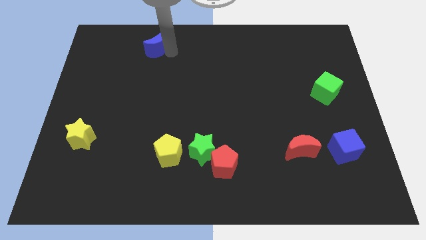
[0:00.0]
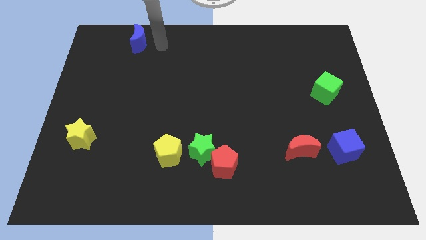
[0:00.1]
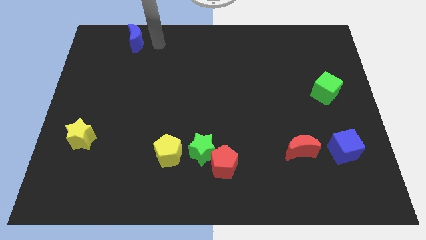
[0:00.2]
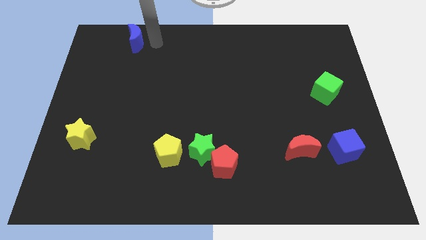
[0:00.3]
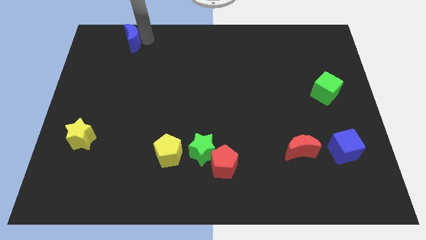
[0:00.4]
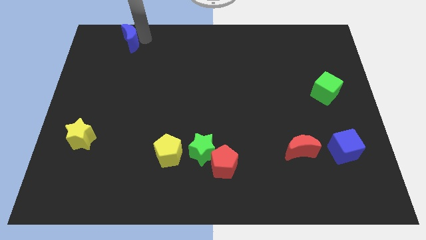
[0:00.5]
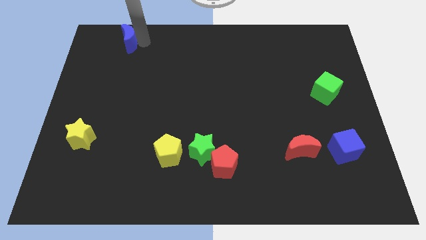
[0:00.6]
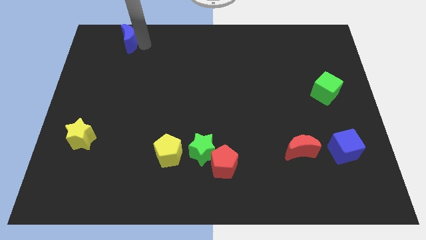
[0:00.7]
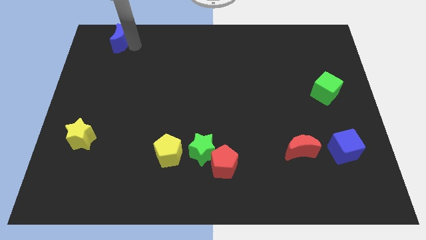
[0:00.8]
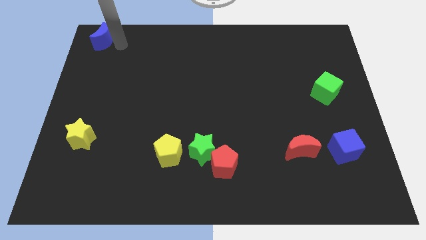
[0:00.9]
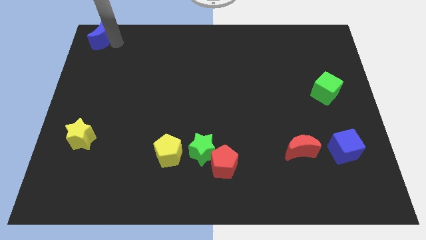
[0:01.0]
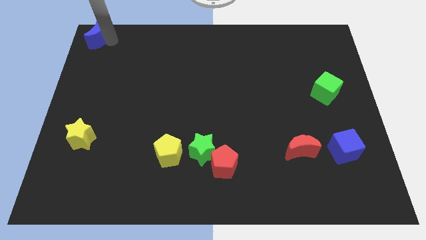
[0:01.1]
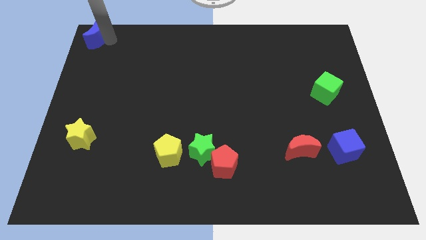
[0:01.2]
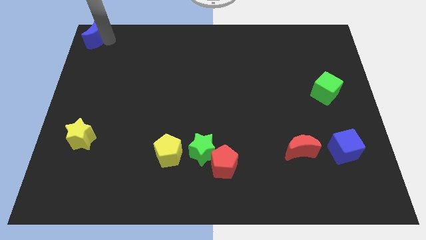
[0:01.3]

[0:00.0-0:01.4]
place the blue moon parallel to the yellow star

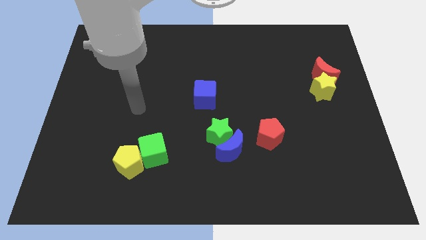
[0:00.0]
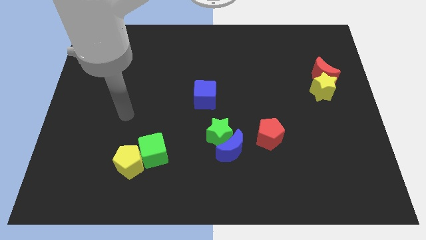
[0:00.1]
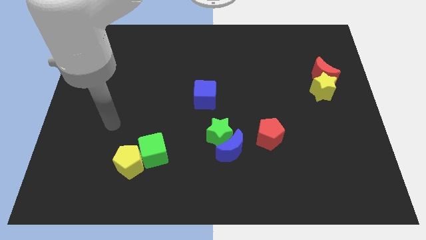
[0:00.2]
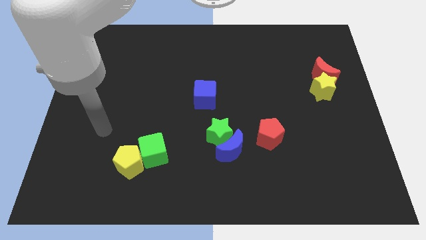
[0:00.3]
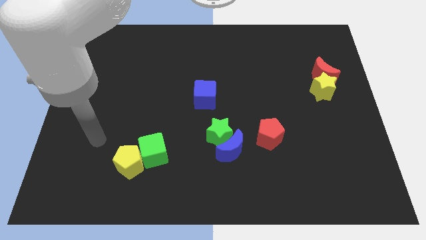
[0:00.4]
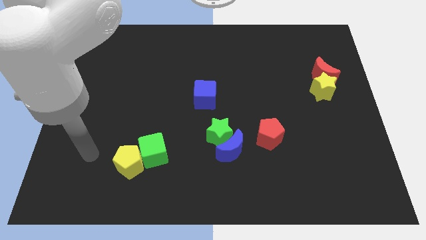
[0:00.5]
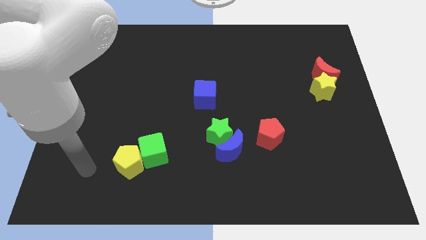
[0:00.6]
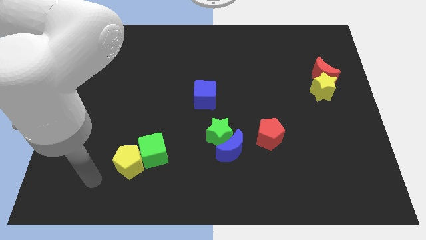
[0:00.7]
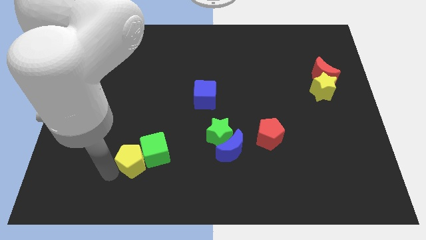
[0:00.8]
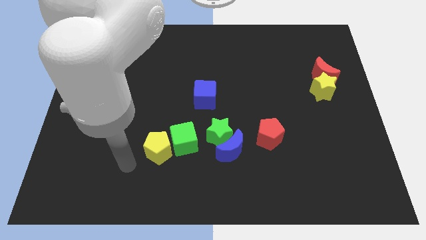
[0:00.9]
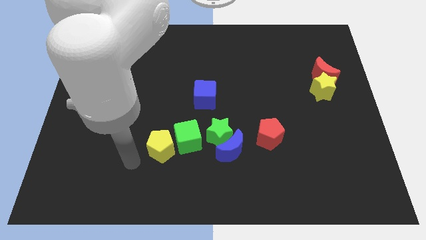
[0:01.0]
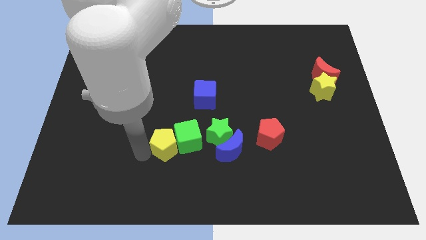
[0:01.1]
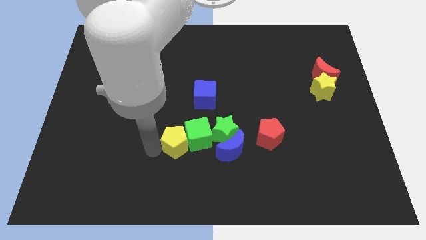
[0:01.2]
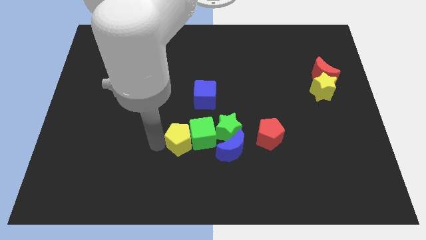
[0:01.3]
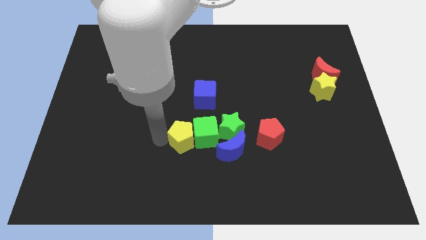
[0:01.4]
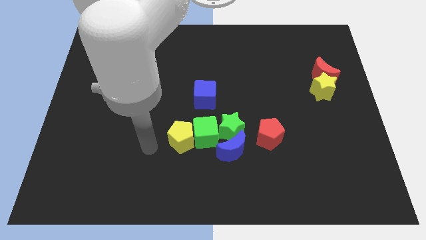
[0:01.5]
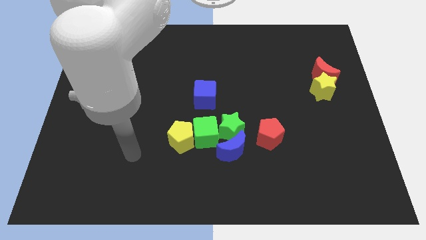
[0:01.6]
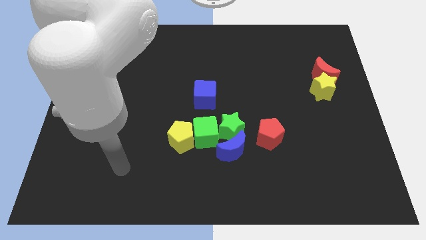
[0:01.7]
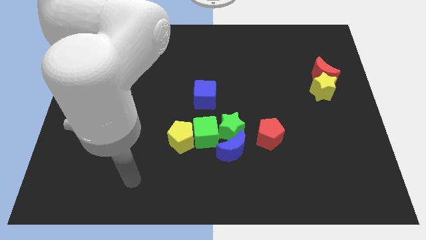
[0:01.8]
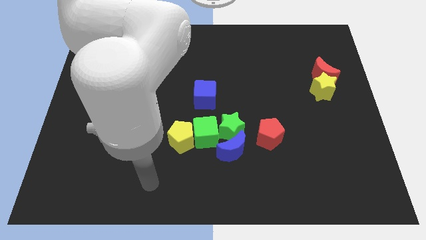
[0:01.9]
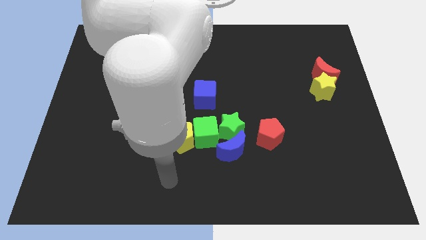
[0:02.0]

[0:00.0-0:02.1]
push the yellow pentagon with green cube into green star

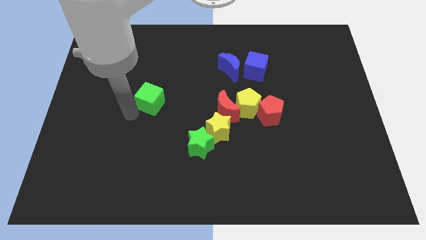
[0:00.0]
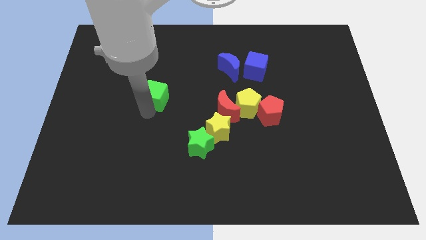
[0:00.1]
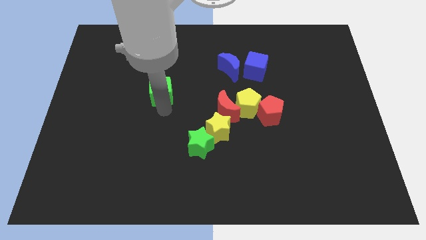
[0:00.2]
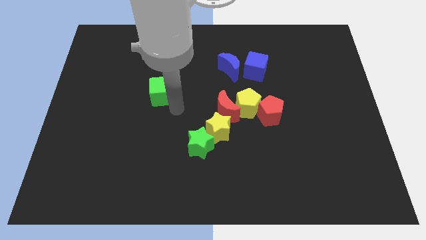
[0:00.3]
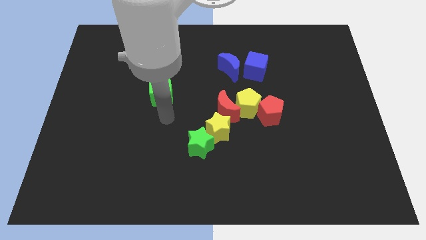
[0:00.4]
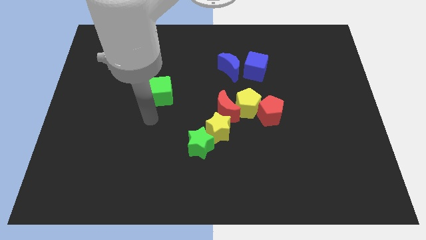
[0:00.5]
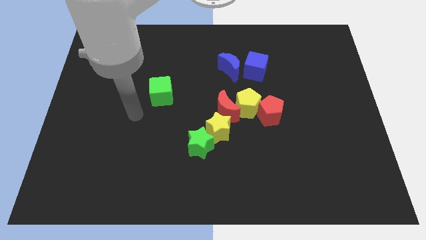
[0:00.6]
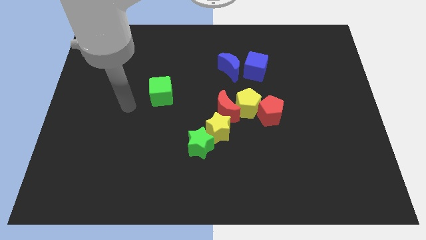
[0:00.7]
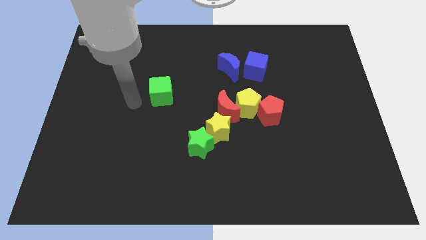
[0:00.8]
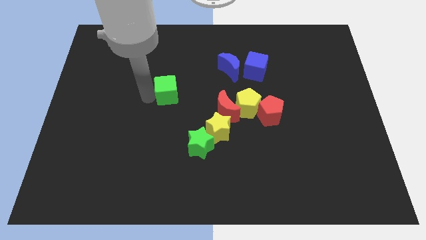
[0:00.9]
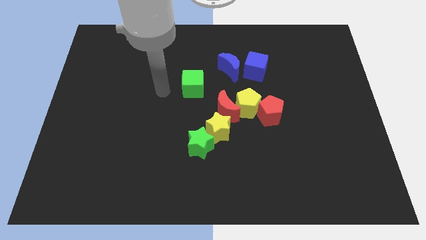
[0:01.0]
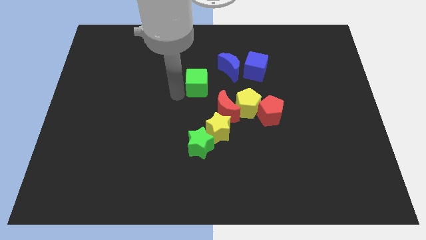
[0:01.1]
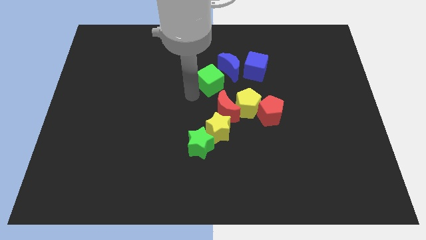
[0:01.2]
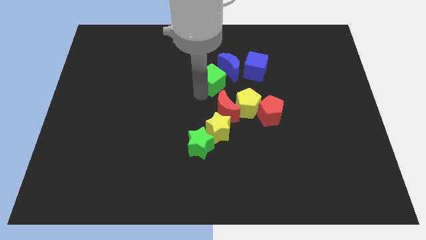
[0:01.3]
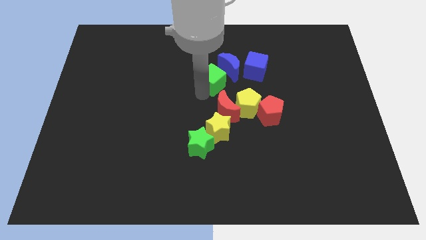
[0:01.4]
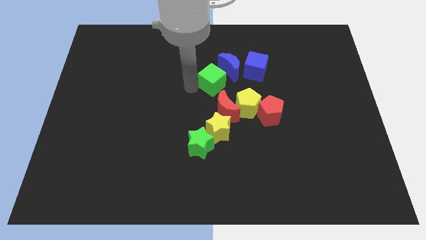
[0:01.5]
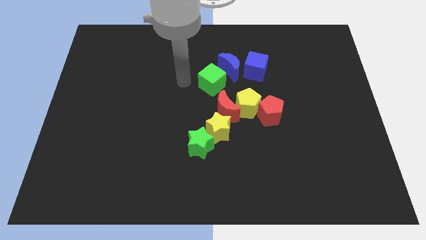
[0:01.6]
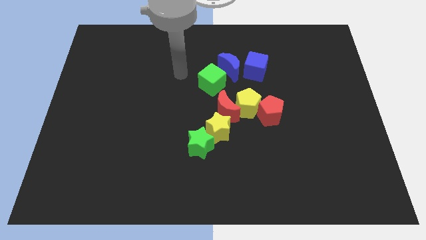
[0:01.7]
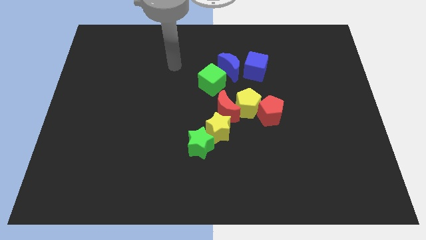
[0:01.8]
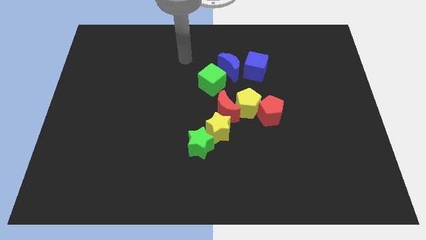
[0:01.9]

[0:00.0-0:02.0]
push the green cube towards the blue moon

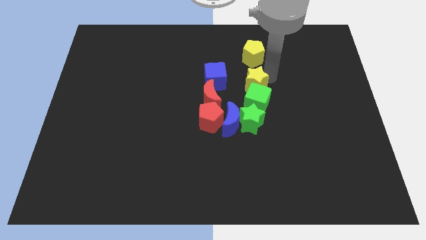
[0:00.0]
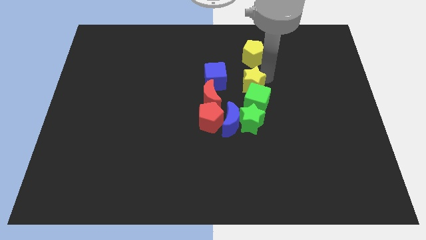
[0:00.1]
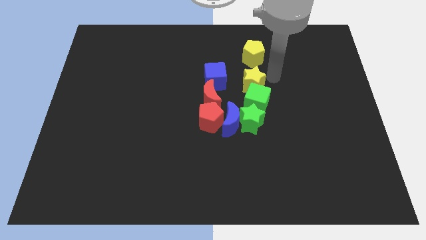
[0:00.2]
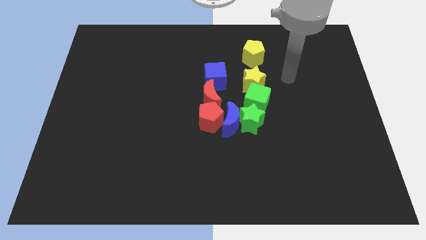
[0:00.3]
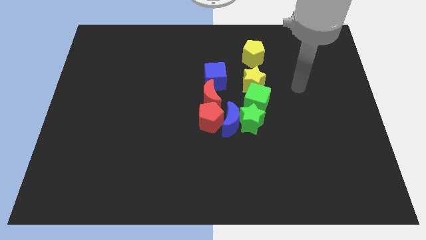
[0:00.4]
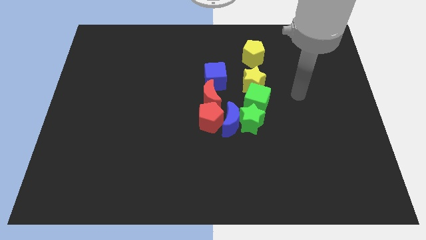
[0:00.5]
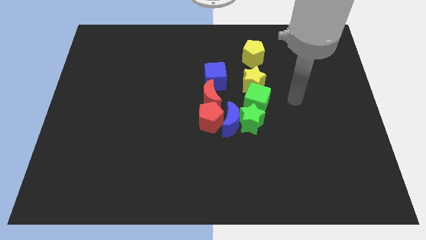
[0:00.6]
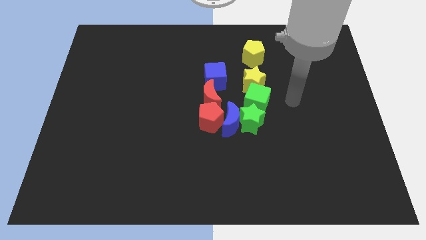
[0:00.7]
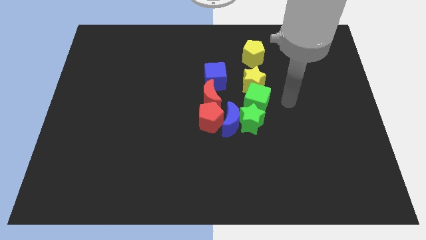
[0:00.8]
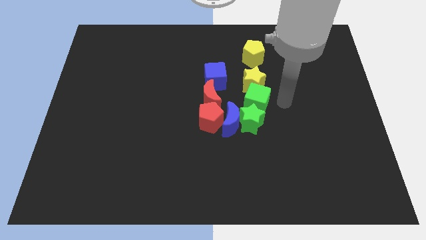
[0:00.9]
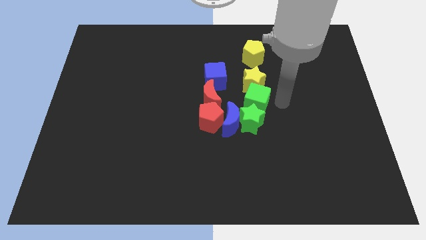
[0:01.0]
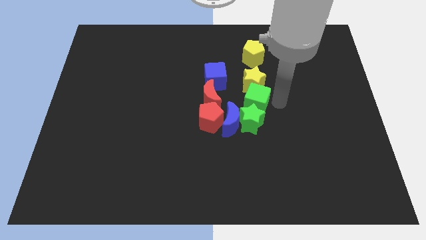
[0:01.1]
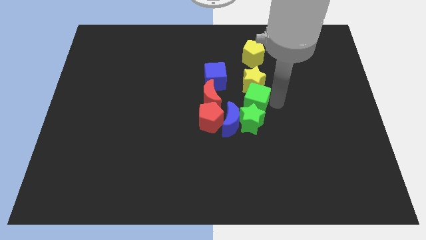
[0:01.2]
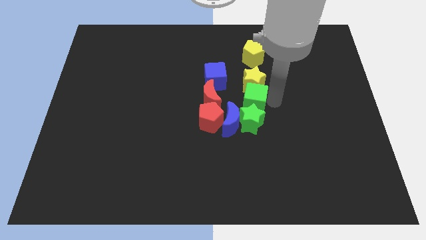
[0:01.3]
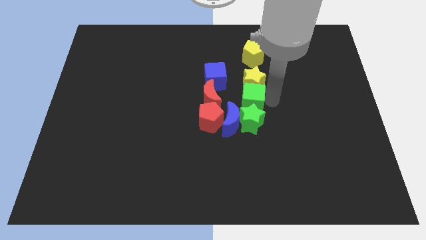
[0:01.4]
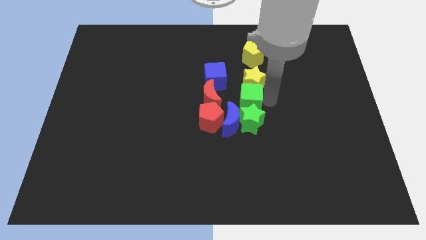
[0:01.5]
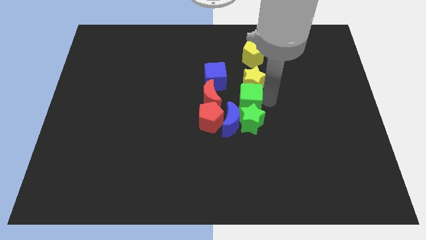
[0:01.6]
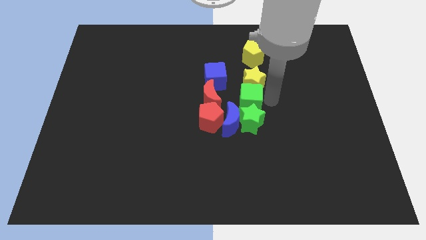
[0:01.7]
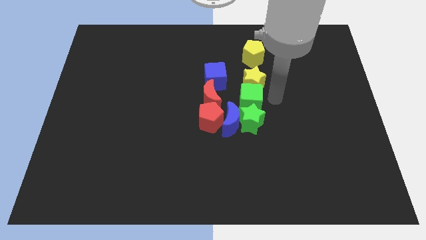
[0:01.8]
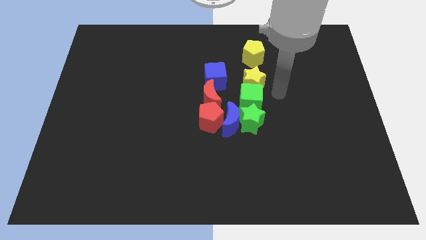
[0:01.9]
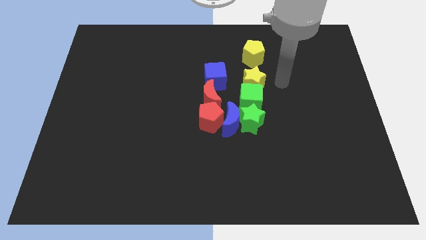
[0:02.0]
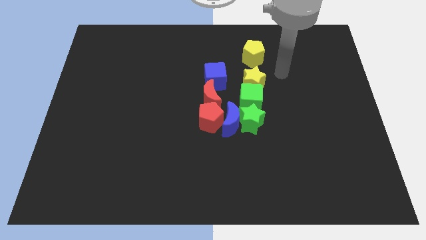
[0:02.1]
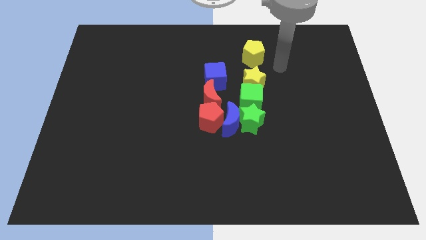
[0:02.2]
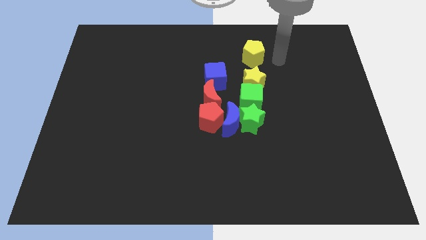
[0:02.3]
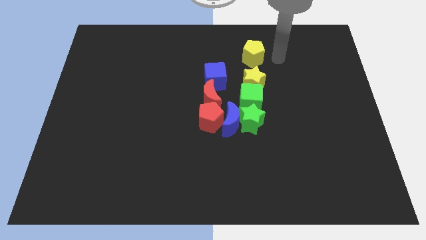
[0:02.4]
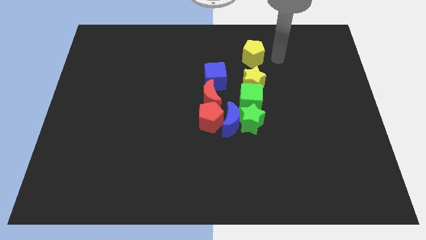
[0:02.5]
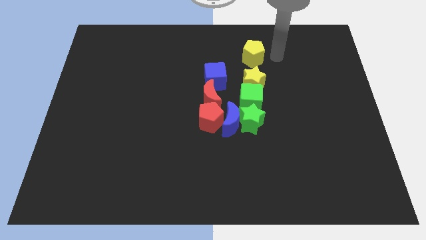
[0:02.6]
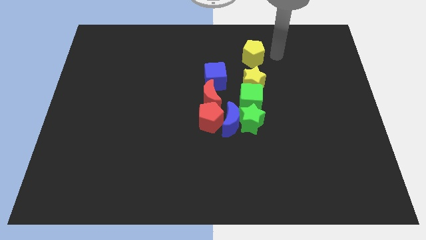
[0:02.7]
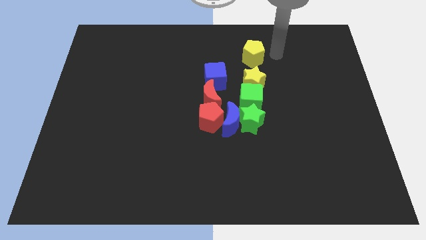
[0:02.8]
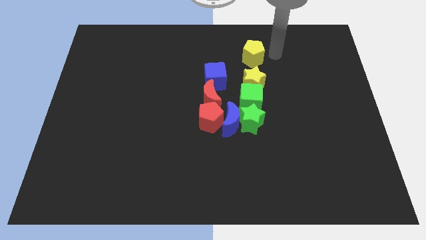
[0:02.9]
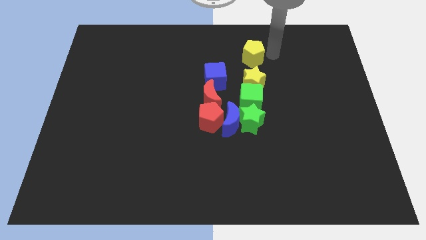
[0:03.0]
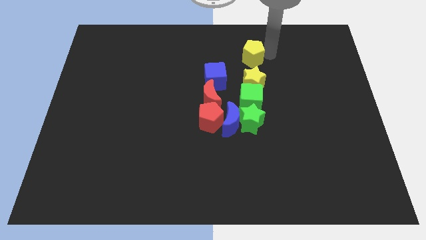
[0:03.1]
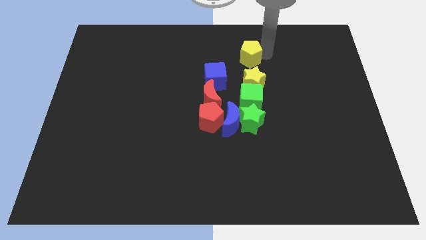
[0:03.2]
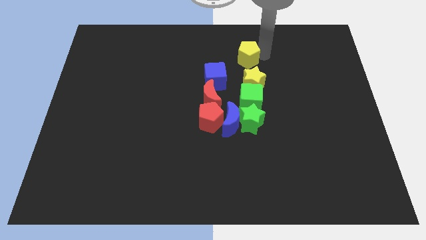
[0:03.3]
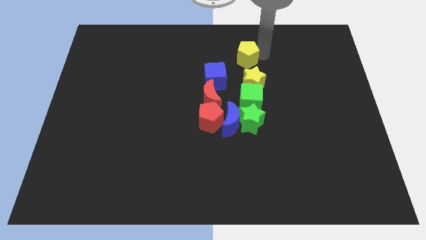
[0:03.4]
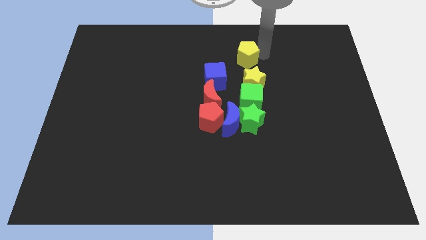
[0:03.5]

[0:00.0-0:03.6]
move the yellow pentagon in a vertical line above the yellow star
